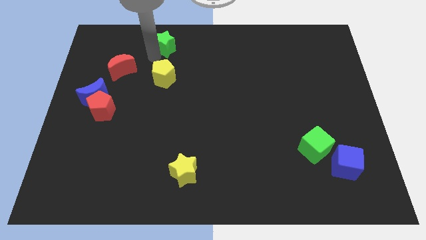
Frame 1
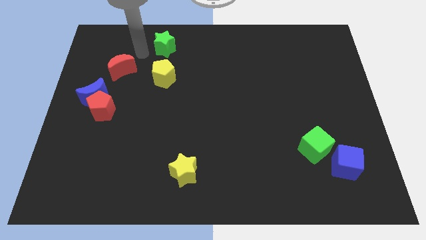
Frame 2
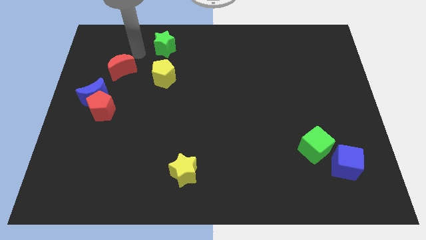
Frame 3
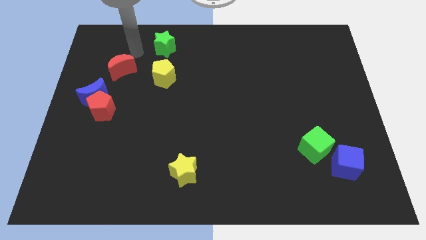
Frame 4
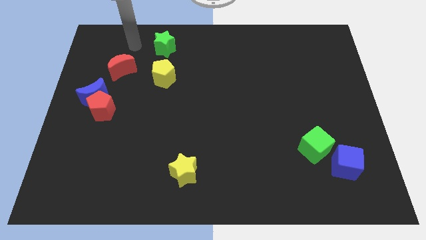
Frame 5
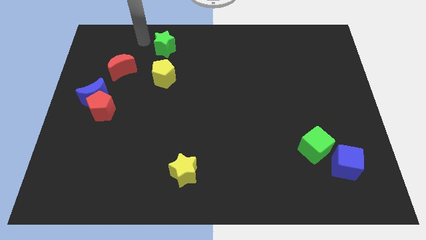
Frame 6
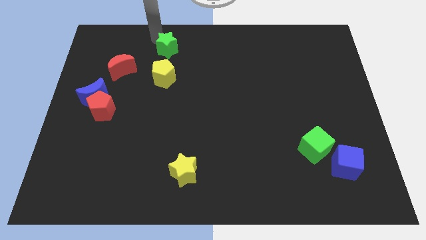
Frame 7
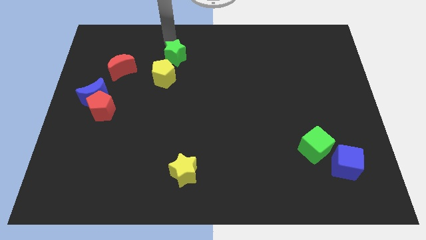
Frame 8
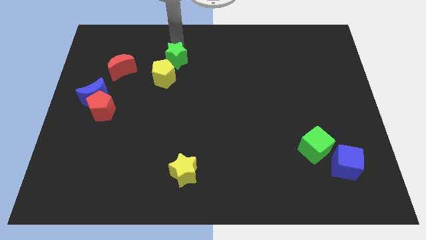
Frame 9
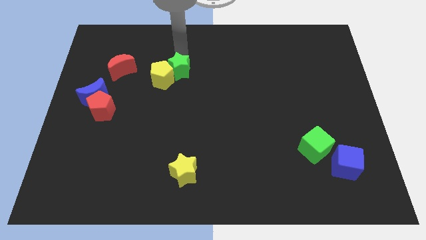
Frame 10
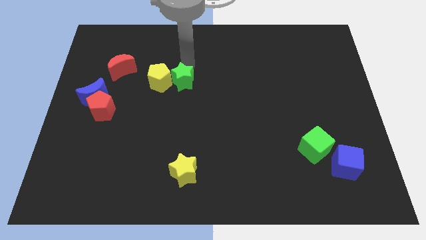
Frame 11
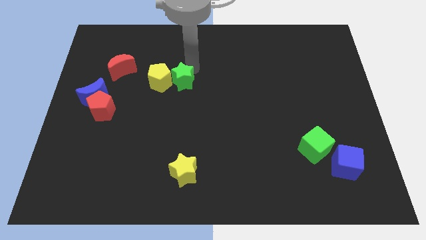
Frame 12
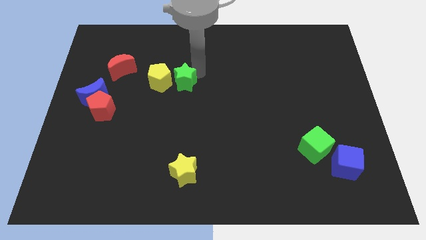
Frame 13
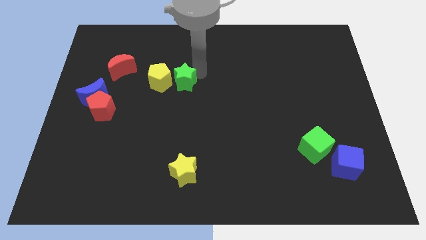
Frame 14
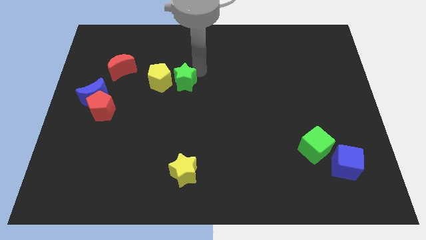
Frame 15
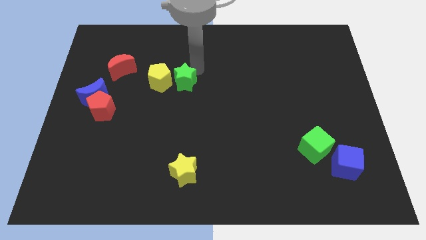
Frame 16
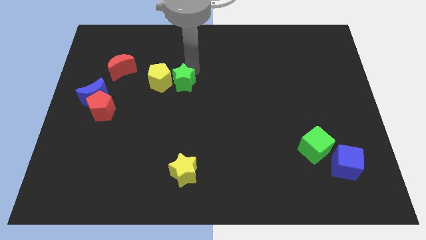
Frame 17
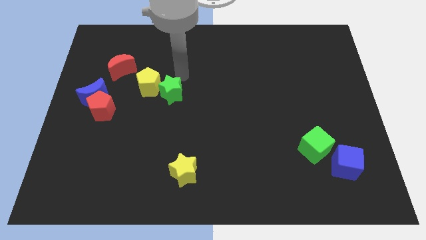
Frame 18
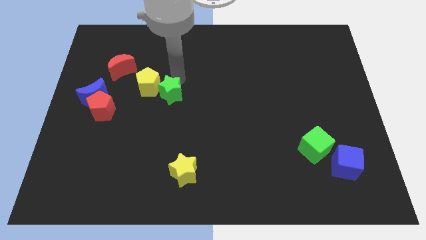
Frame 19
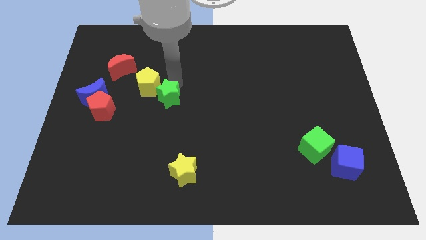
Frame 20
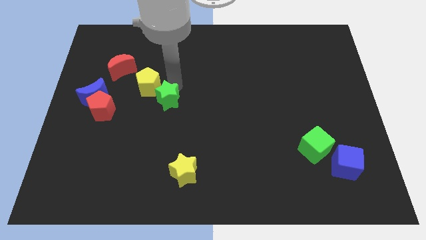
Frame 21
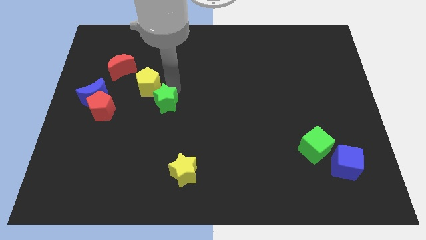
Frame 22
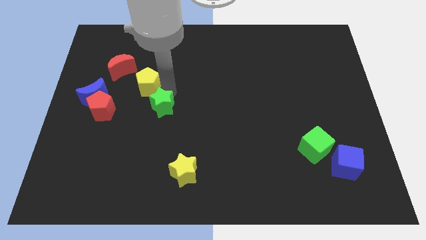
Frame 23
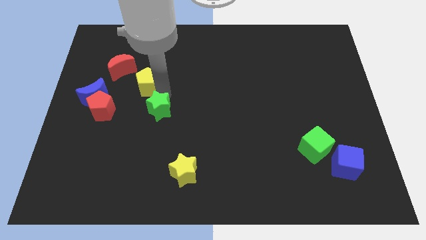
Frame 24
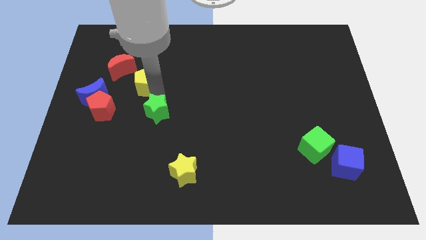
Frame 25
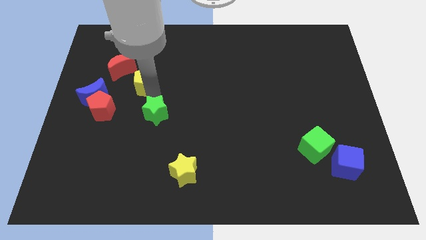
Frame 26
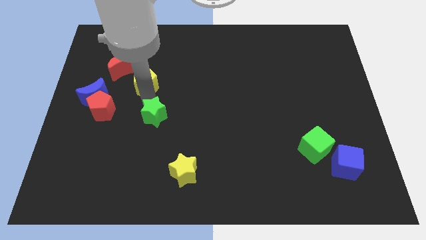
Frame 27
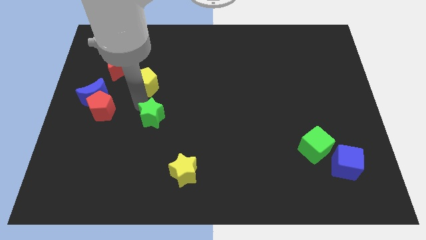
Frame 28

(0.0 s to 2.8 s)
push the green star to the top of the yellow pentagon

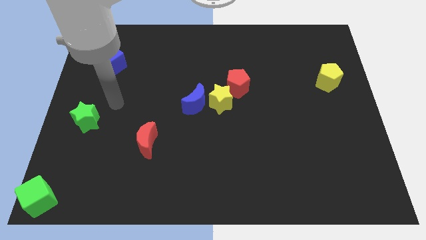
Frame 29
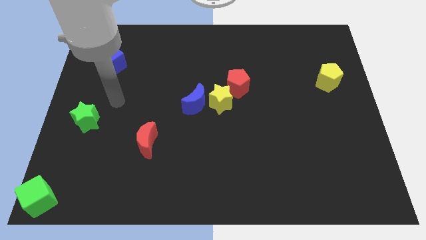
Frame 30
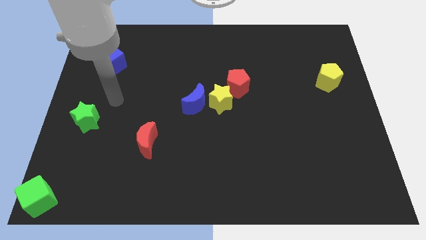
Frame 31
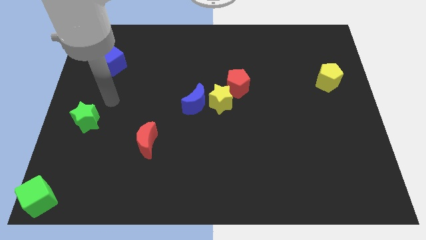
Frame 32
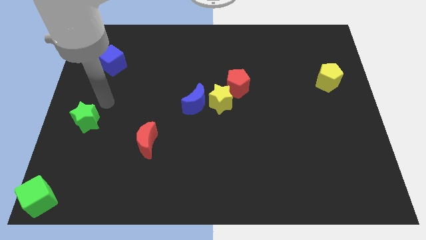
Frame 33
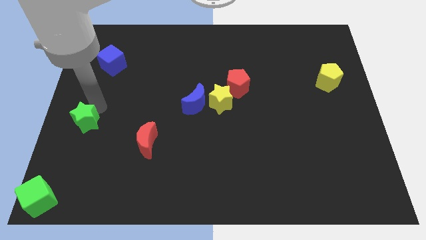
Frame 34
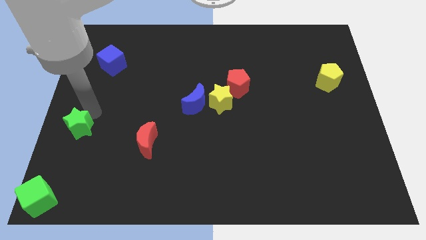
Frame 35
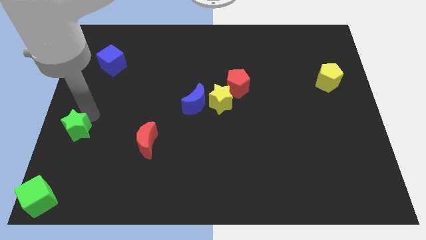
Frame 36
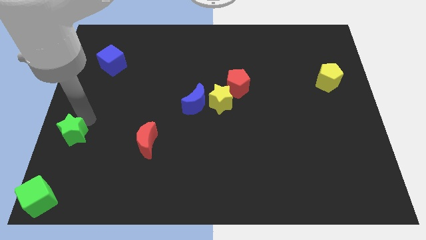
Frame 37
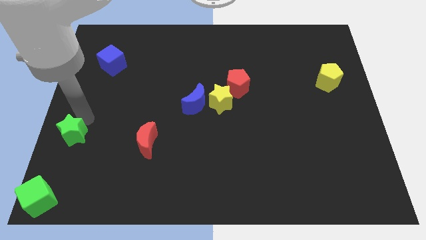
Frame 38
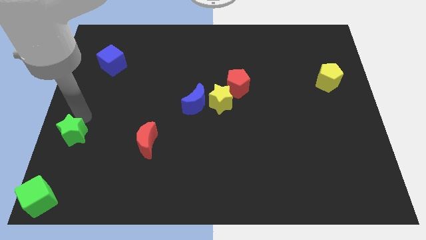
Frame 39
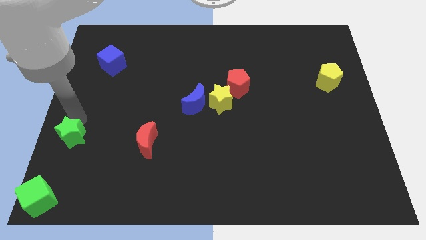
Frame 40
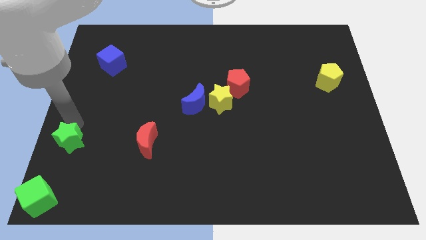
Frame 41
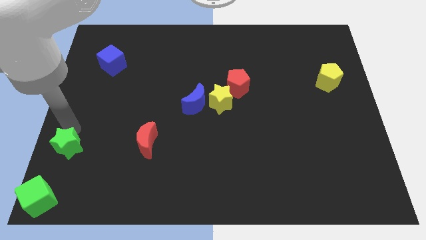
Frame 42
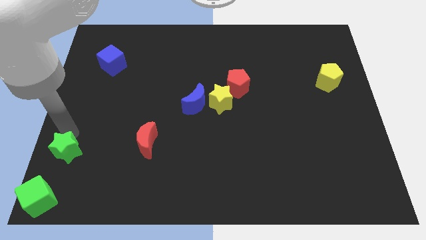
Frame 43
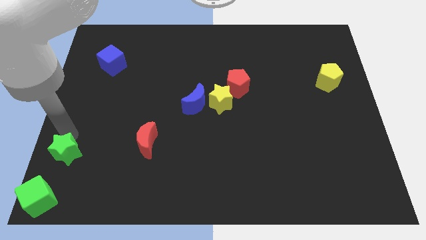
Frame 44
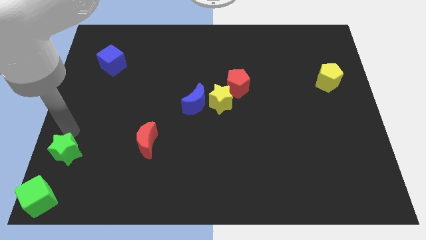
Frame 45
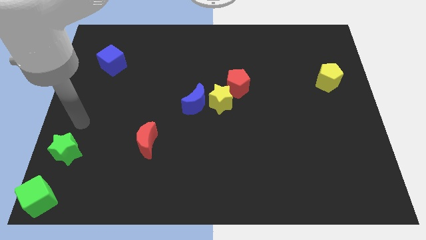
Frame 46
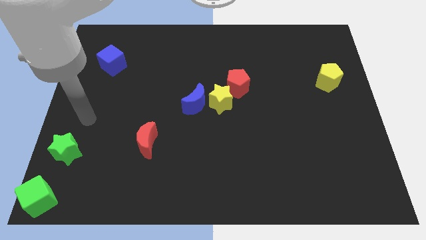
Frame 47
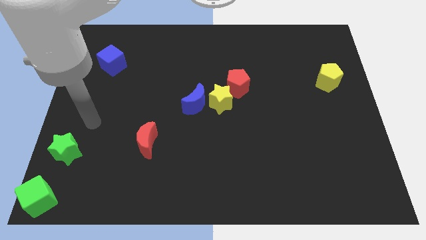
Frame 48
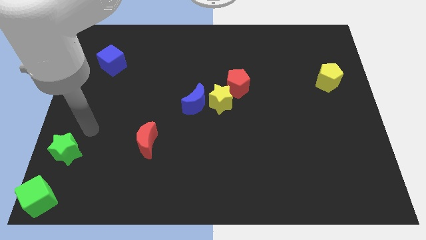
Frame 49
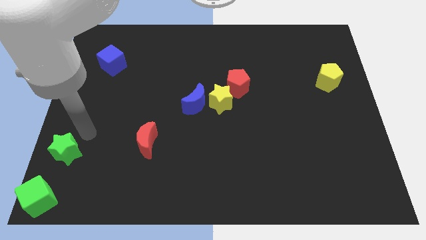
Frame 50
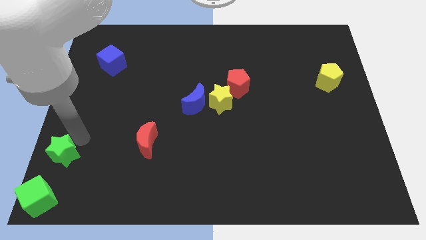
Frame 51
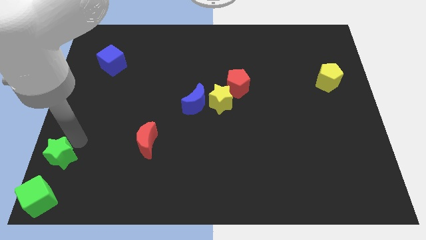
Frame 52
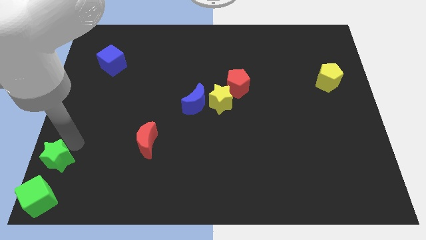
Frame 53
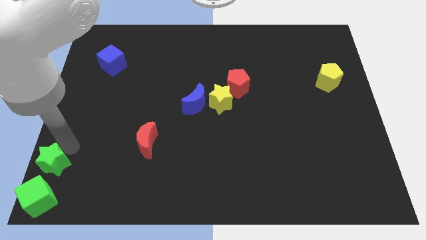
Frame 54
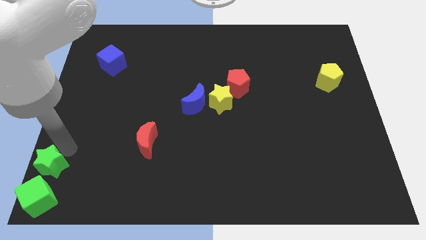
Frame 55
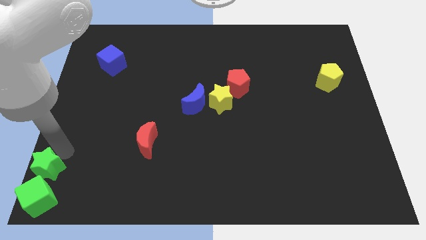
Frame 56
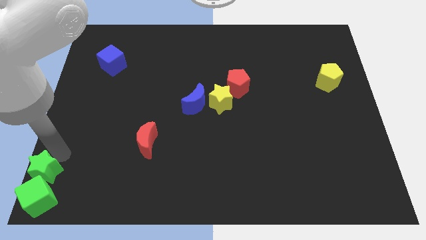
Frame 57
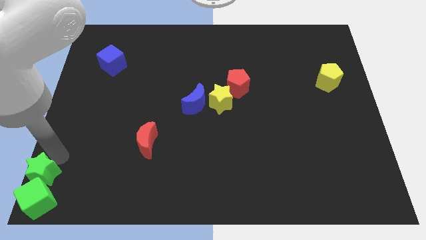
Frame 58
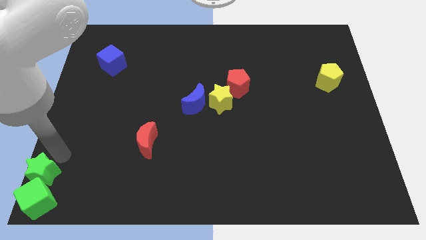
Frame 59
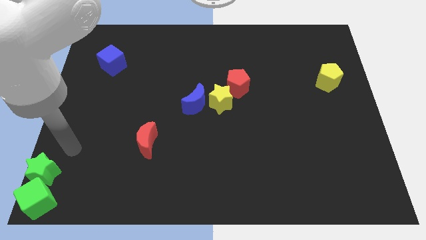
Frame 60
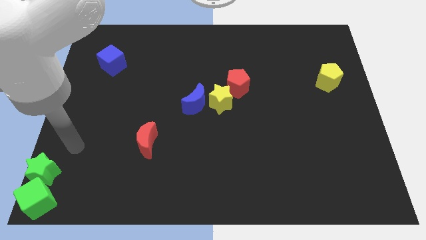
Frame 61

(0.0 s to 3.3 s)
move the green star aboe the green cube

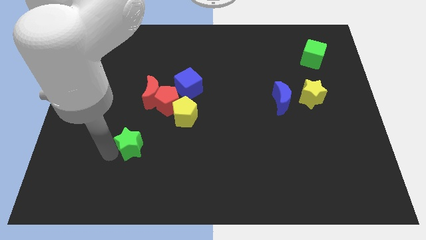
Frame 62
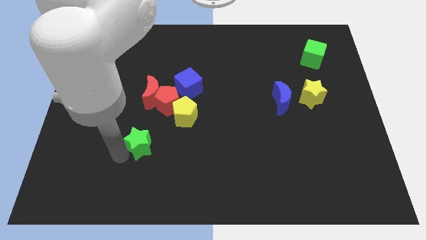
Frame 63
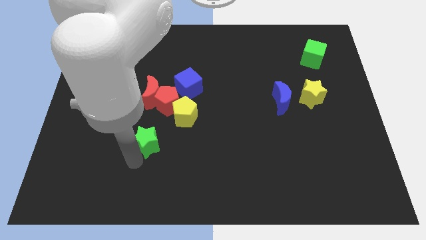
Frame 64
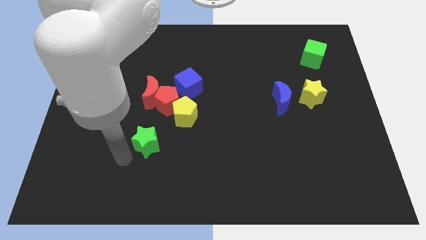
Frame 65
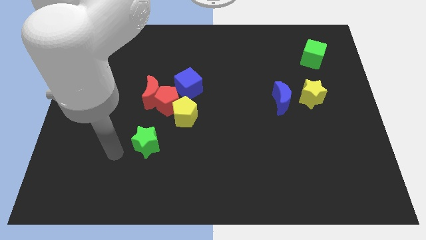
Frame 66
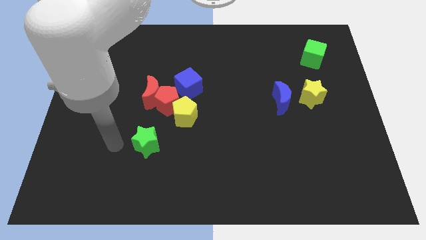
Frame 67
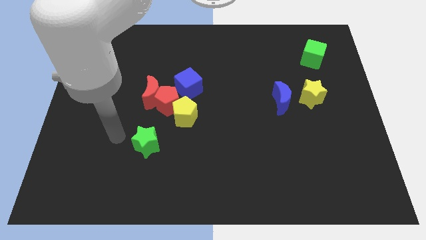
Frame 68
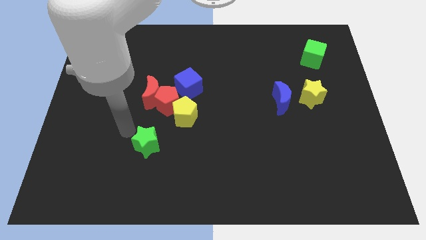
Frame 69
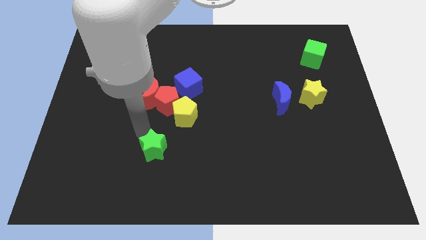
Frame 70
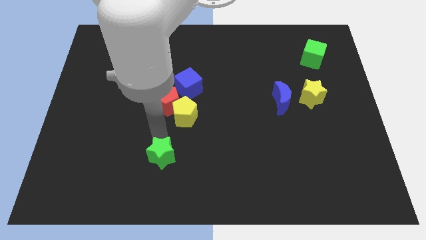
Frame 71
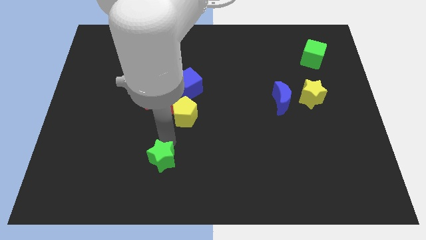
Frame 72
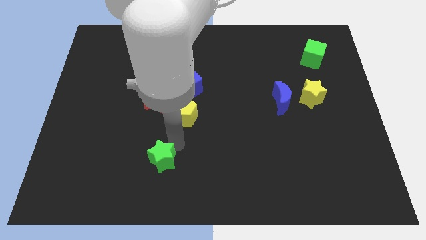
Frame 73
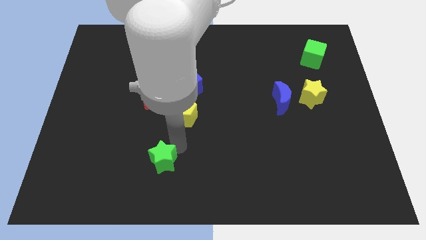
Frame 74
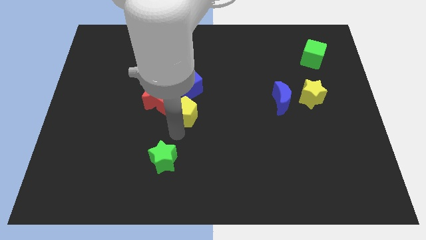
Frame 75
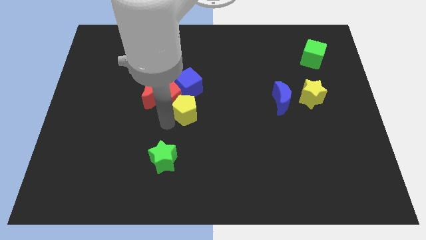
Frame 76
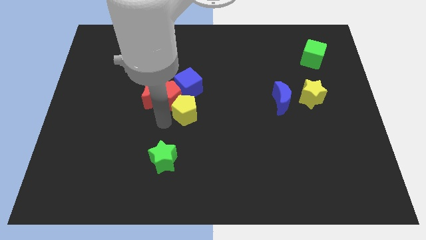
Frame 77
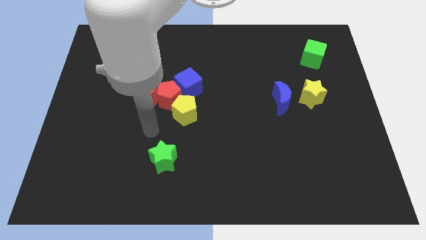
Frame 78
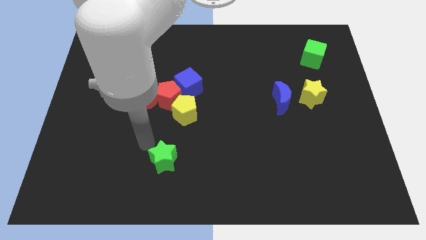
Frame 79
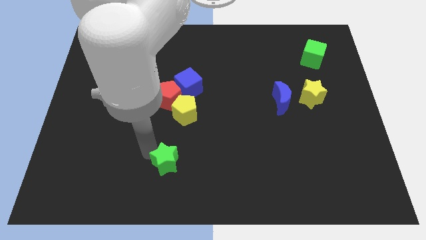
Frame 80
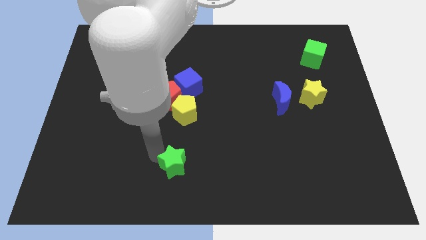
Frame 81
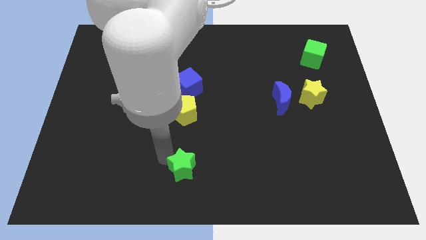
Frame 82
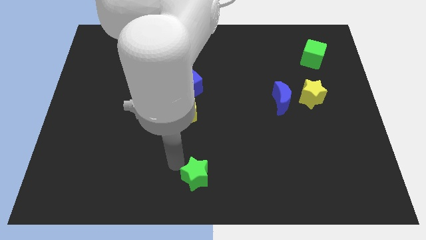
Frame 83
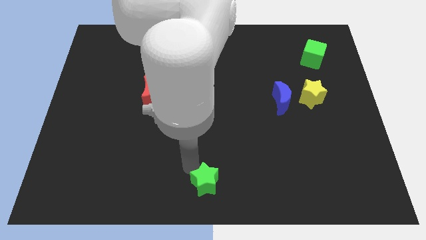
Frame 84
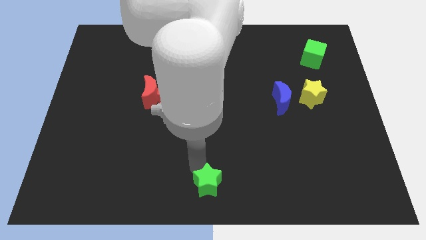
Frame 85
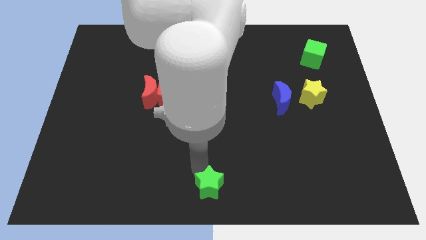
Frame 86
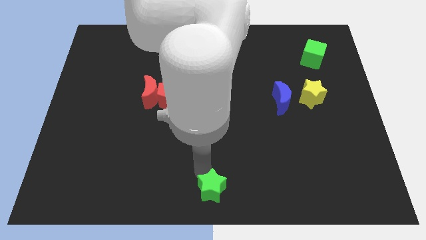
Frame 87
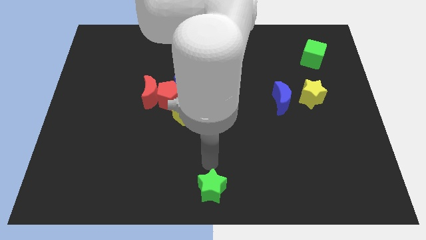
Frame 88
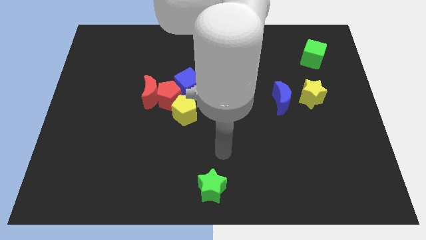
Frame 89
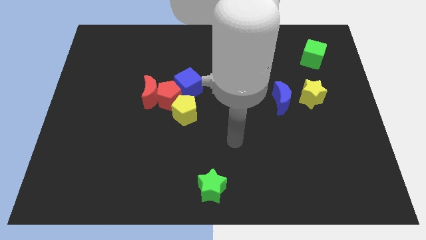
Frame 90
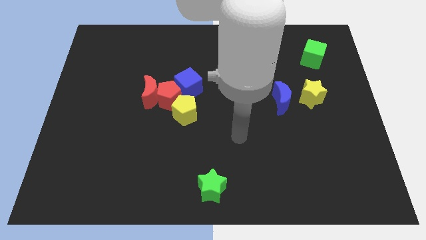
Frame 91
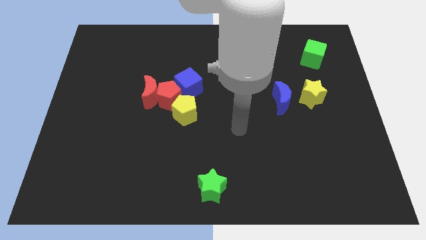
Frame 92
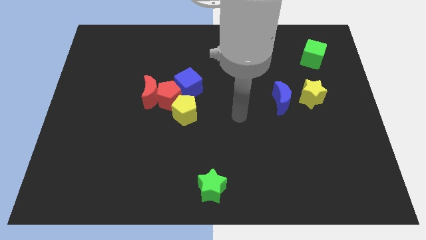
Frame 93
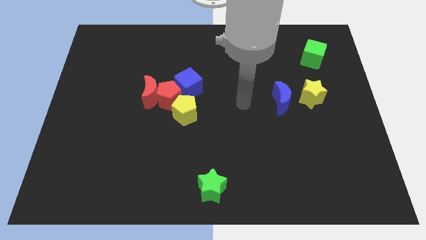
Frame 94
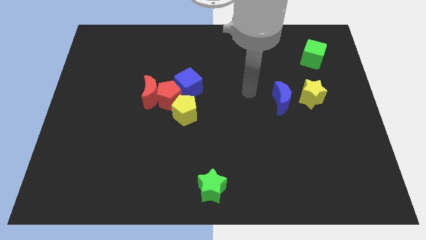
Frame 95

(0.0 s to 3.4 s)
push the green star to the bottom center of board
